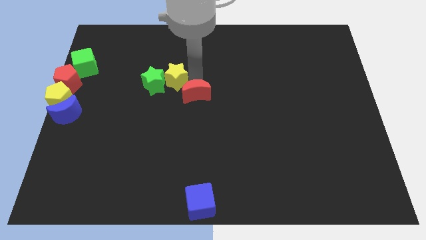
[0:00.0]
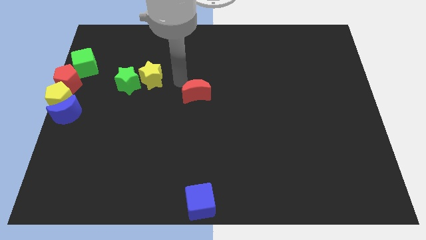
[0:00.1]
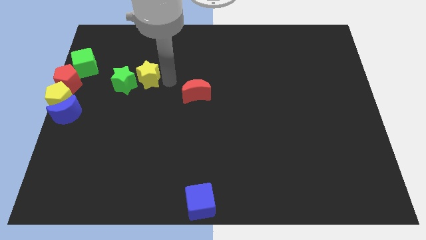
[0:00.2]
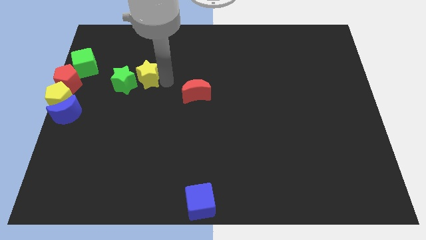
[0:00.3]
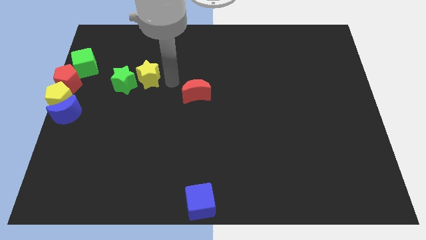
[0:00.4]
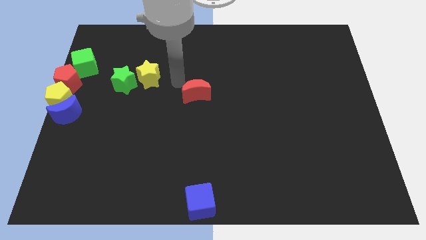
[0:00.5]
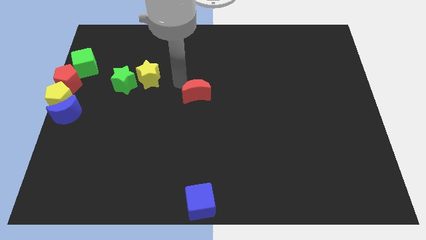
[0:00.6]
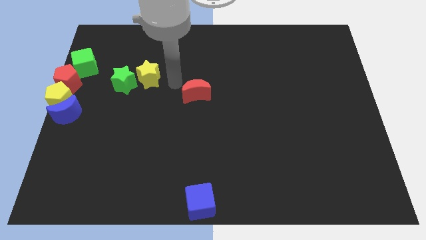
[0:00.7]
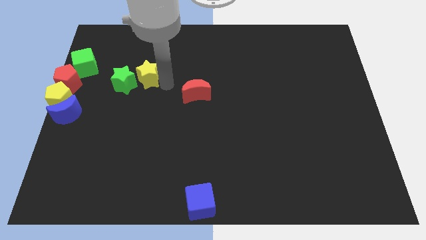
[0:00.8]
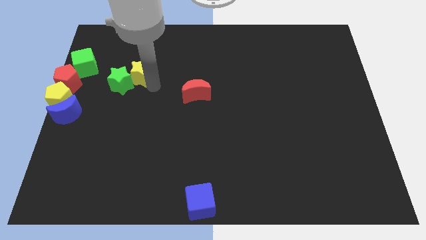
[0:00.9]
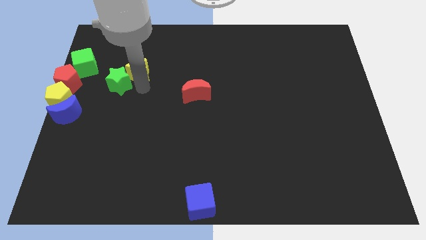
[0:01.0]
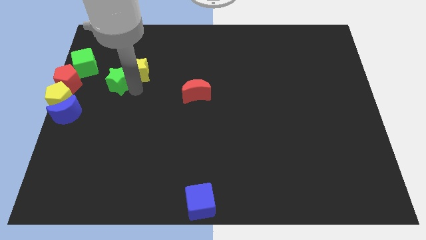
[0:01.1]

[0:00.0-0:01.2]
push the yellow star into the green star

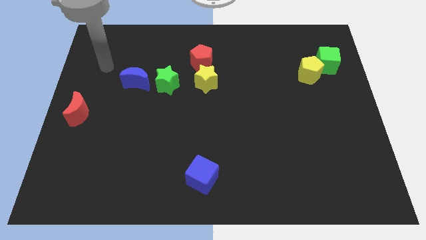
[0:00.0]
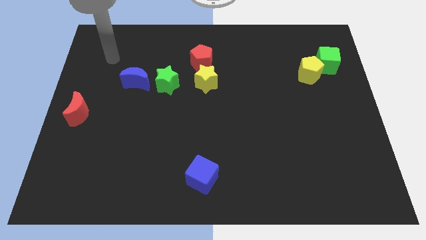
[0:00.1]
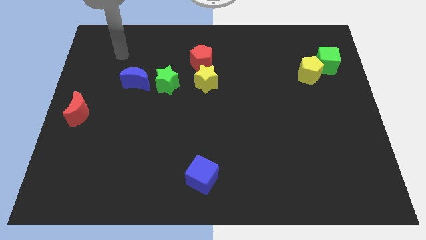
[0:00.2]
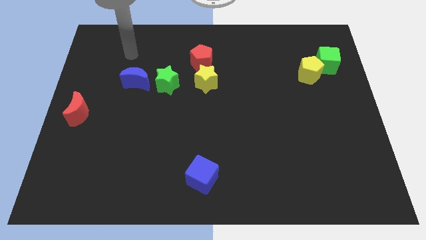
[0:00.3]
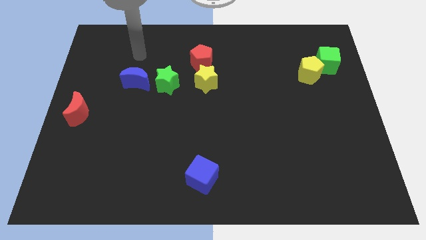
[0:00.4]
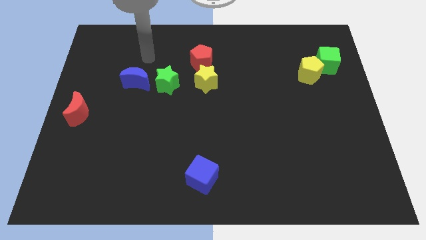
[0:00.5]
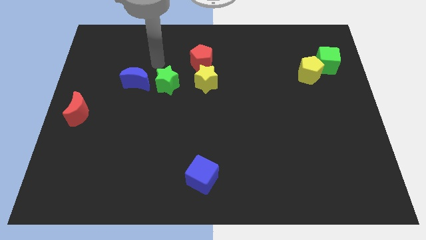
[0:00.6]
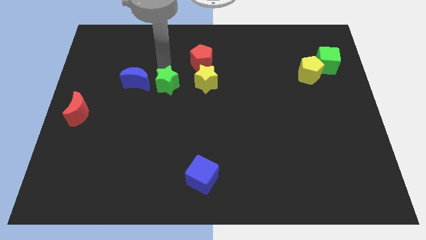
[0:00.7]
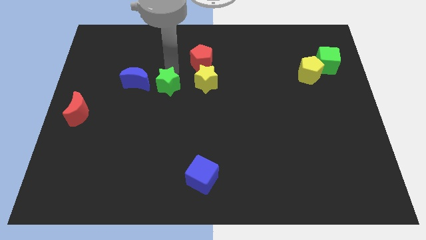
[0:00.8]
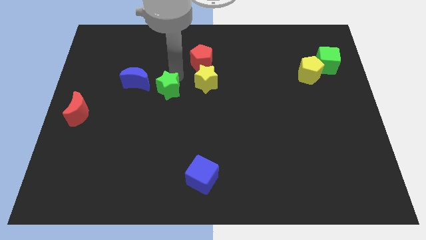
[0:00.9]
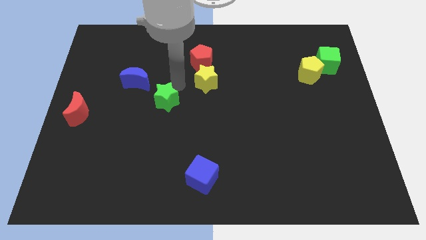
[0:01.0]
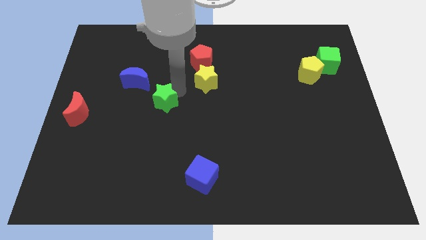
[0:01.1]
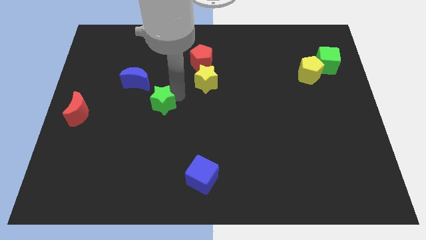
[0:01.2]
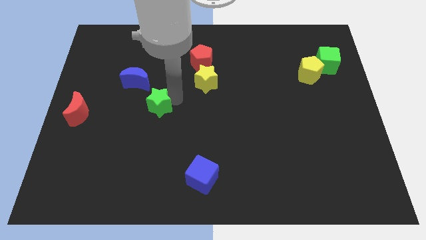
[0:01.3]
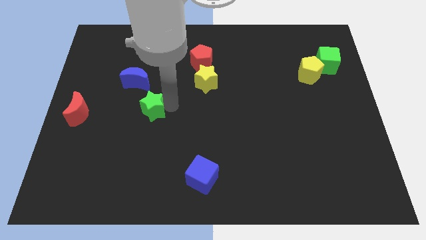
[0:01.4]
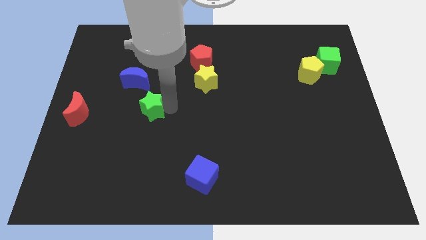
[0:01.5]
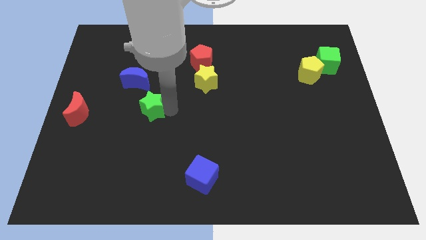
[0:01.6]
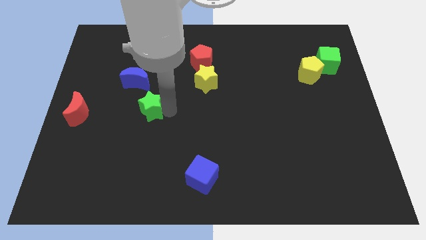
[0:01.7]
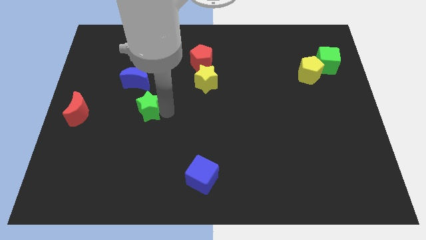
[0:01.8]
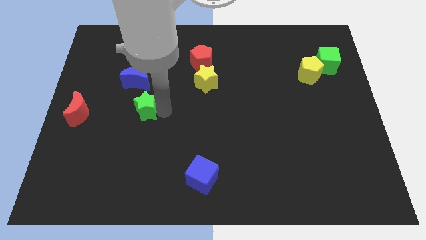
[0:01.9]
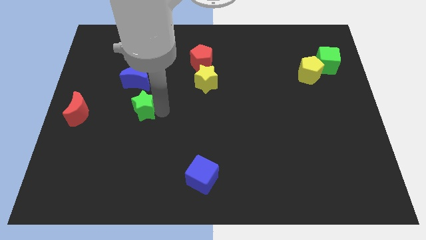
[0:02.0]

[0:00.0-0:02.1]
place green star to the bottom right of blue moon

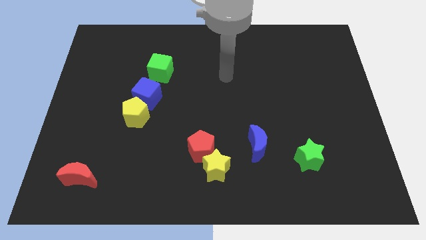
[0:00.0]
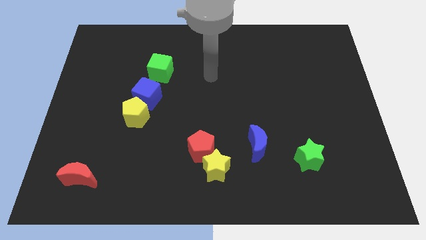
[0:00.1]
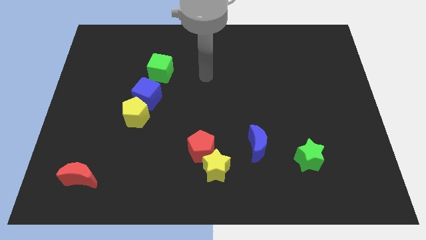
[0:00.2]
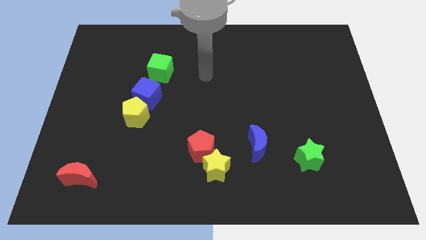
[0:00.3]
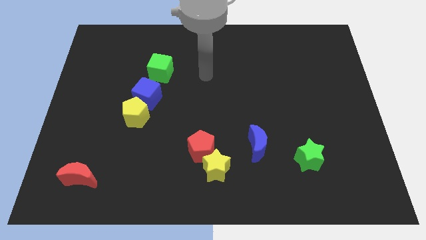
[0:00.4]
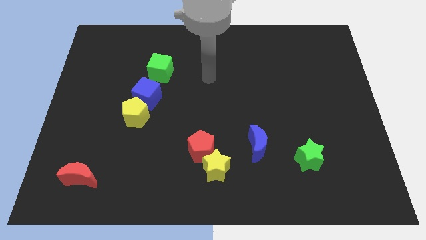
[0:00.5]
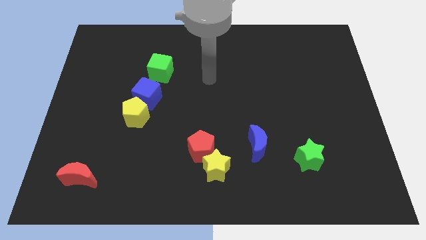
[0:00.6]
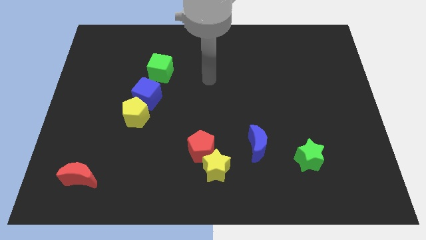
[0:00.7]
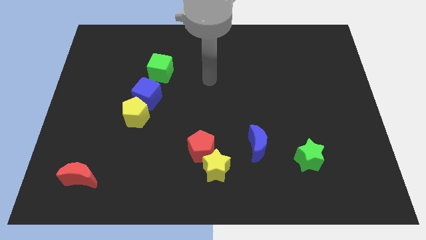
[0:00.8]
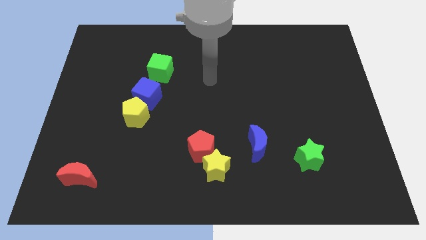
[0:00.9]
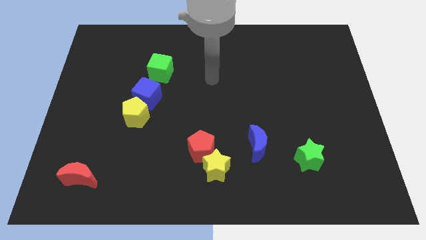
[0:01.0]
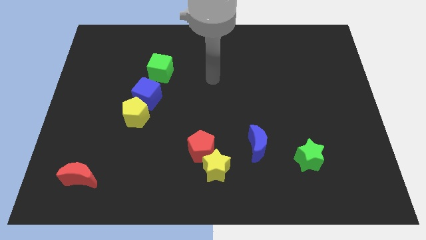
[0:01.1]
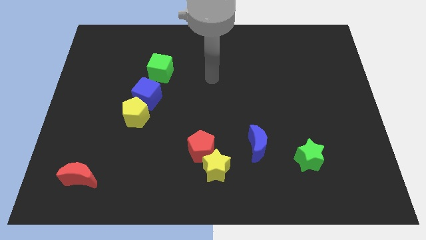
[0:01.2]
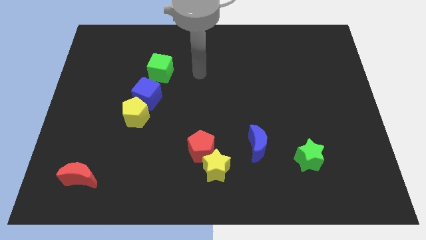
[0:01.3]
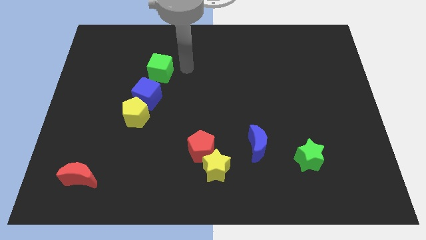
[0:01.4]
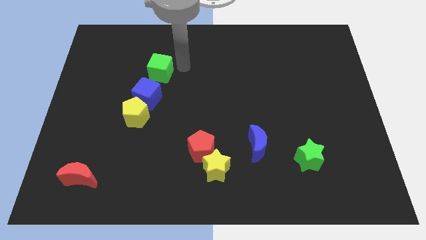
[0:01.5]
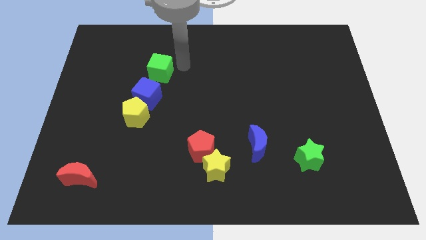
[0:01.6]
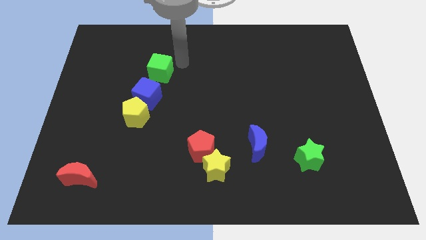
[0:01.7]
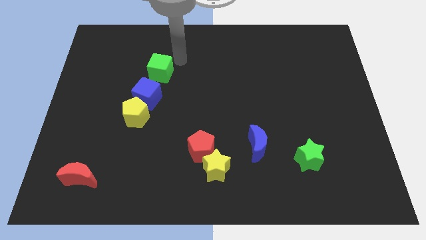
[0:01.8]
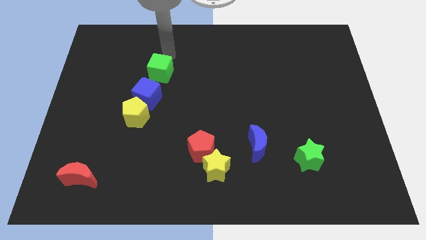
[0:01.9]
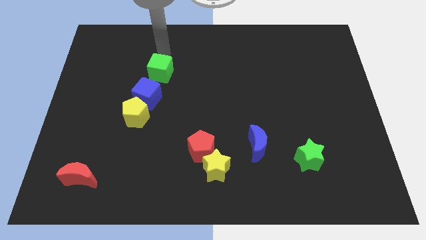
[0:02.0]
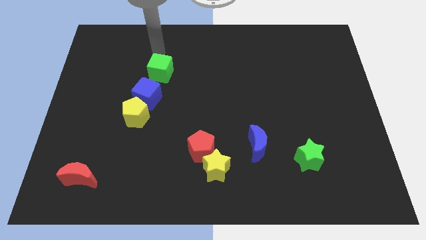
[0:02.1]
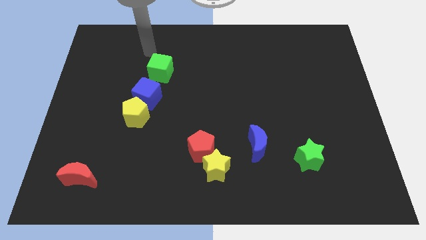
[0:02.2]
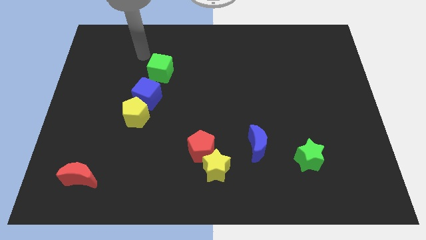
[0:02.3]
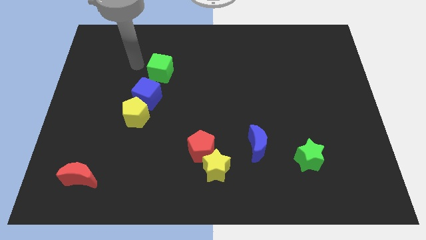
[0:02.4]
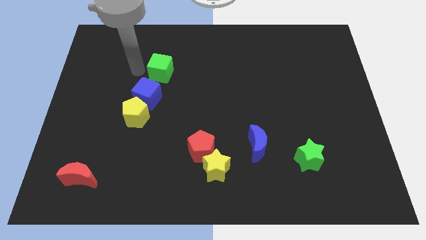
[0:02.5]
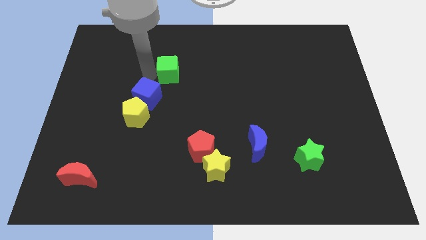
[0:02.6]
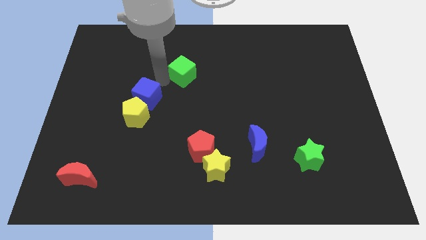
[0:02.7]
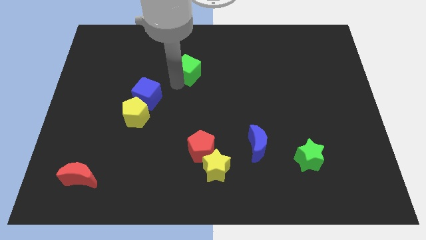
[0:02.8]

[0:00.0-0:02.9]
move green cube slightly right

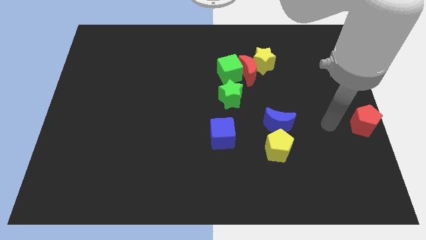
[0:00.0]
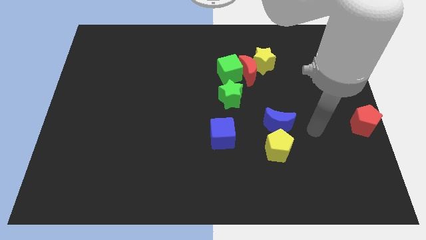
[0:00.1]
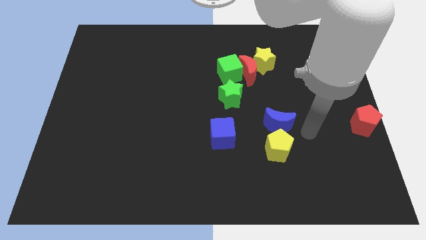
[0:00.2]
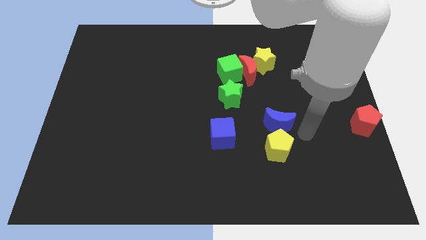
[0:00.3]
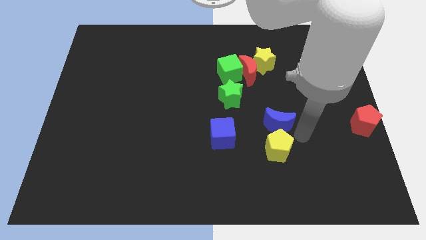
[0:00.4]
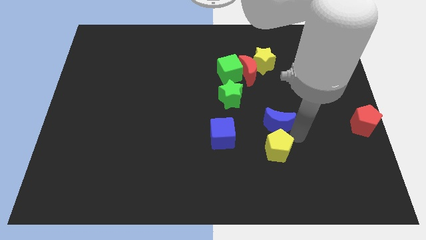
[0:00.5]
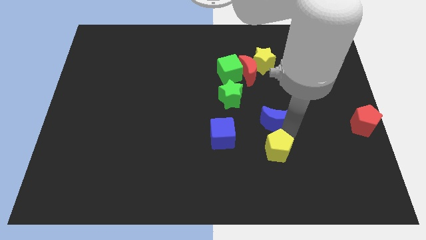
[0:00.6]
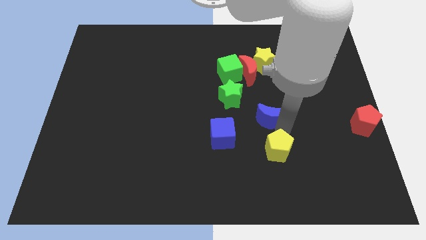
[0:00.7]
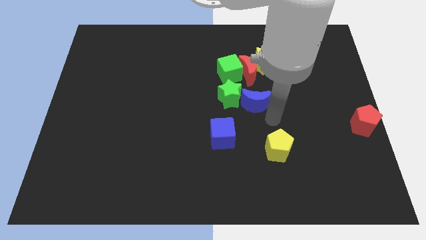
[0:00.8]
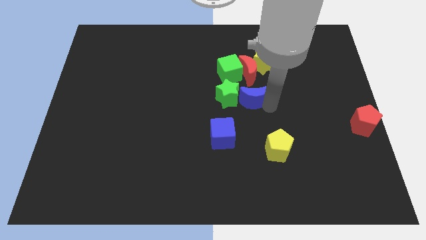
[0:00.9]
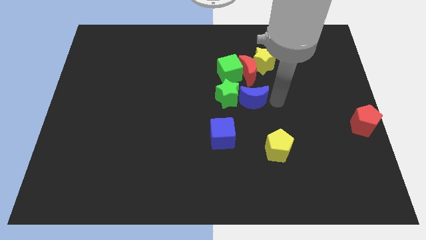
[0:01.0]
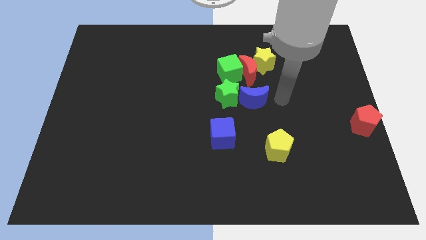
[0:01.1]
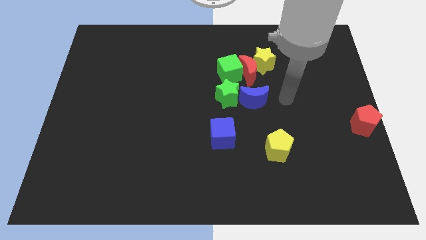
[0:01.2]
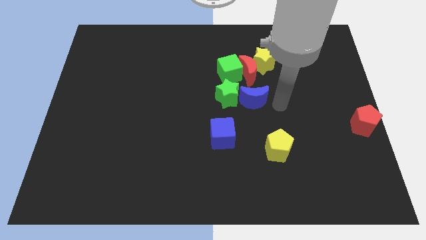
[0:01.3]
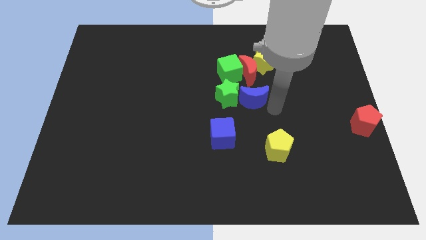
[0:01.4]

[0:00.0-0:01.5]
move the blue crescent into the green star

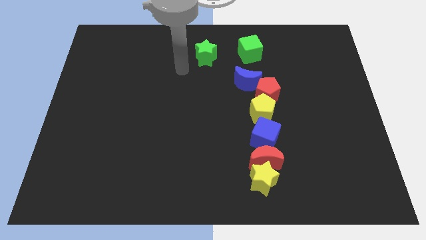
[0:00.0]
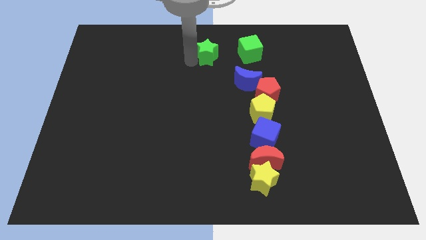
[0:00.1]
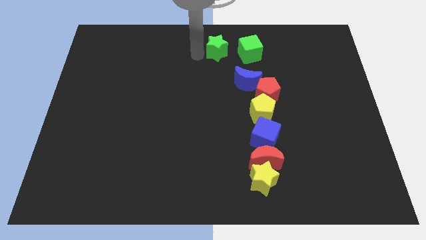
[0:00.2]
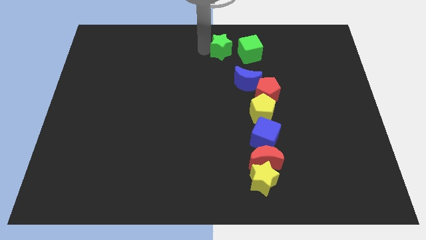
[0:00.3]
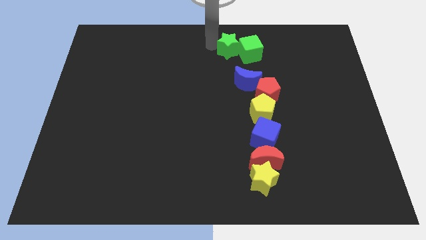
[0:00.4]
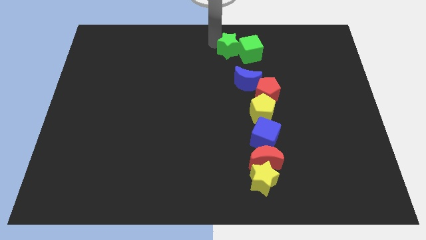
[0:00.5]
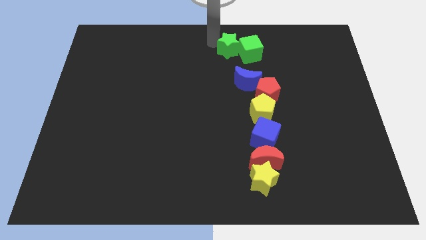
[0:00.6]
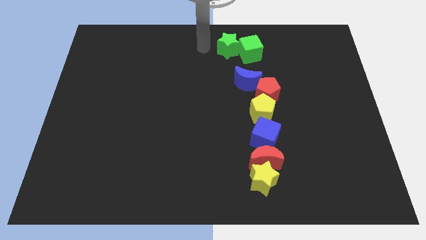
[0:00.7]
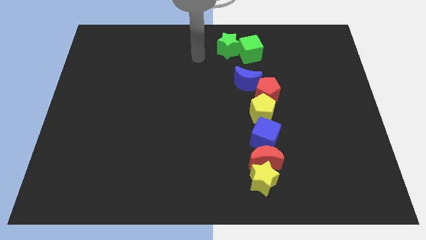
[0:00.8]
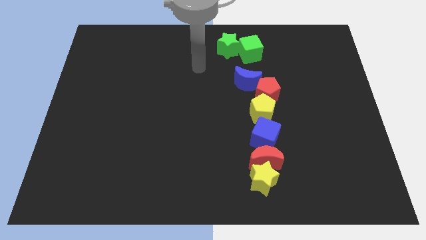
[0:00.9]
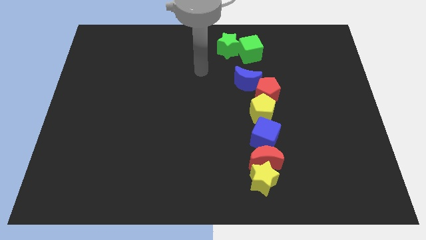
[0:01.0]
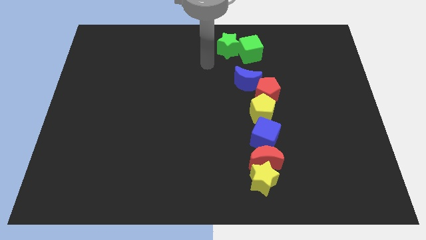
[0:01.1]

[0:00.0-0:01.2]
push the green star into the green cube
